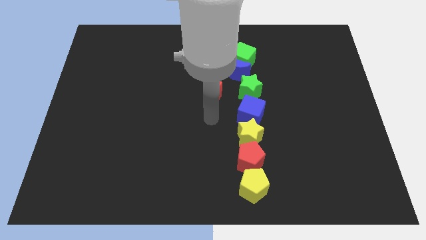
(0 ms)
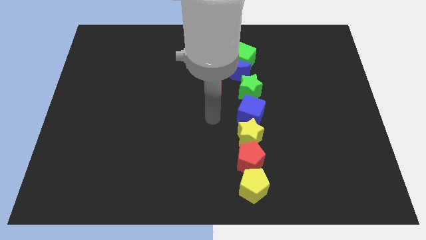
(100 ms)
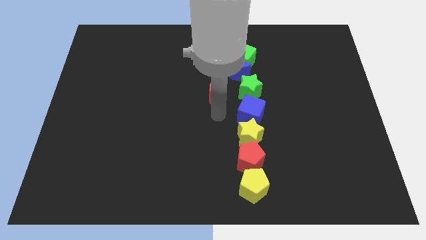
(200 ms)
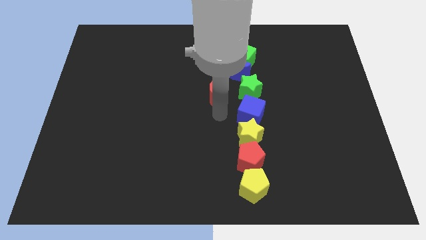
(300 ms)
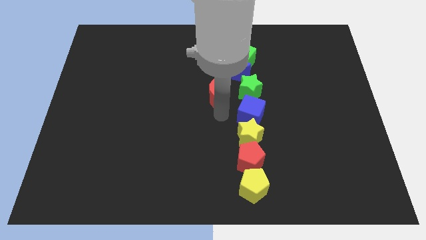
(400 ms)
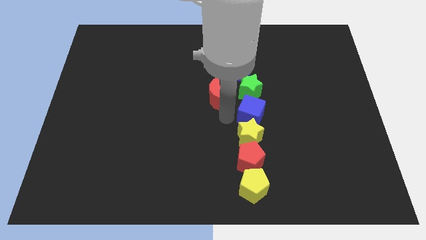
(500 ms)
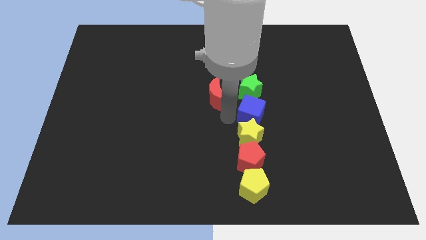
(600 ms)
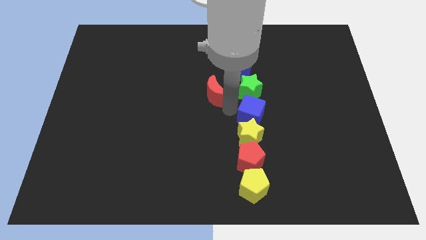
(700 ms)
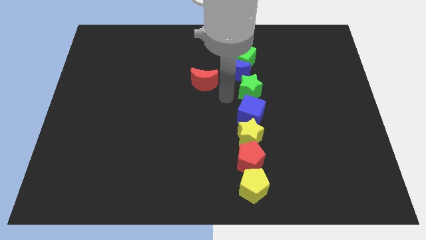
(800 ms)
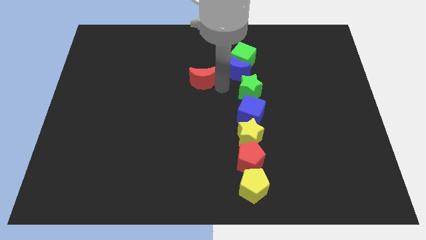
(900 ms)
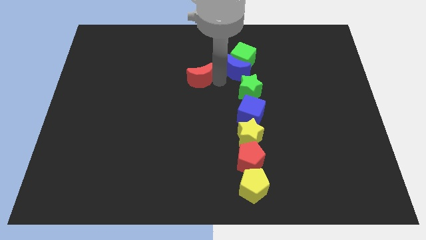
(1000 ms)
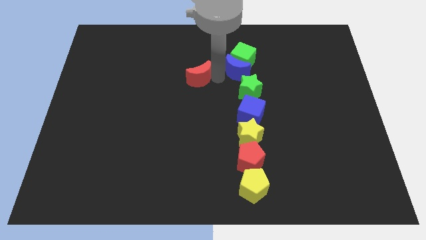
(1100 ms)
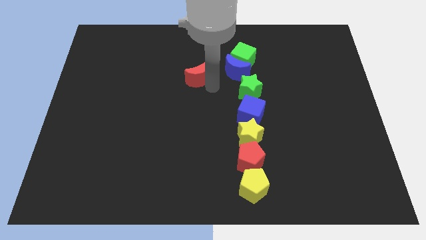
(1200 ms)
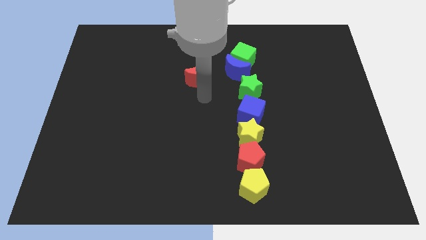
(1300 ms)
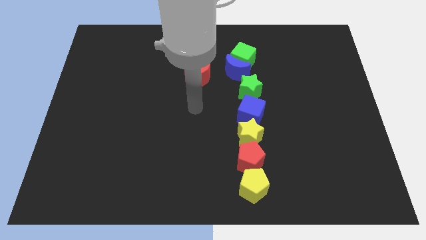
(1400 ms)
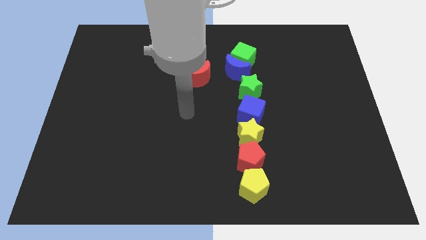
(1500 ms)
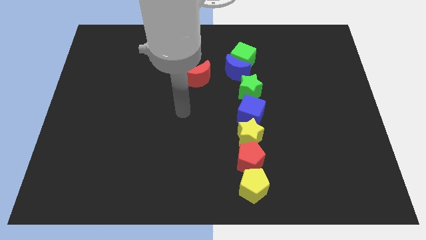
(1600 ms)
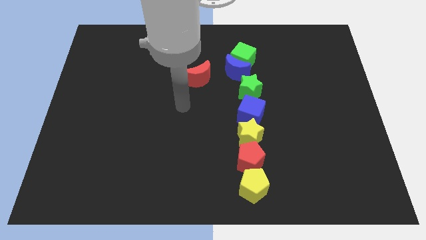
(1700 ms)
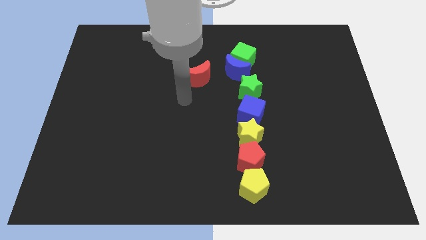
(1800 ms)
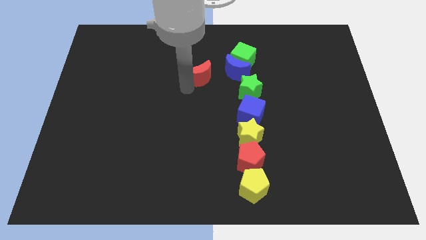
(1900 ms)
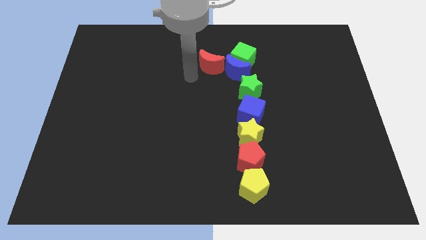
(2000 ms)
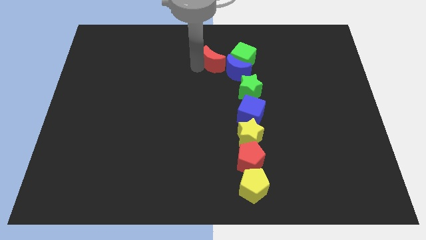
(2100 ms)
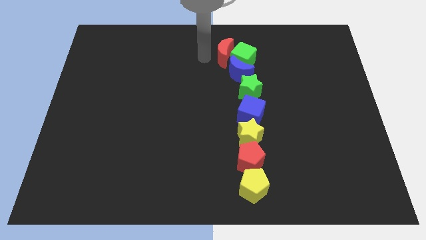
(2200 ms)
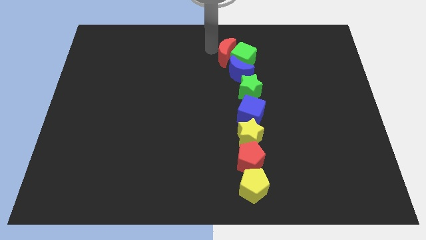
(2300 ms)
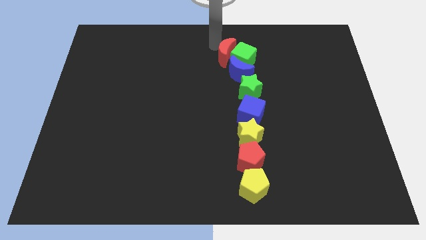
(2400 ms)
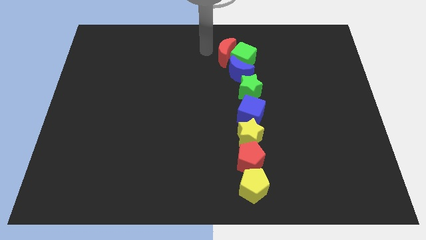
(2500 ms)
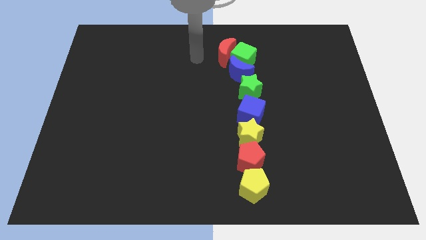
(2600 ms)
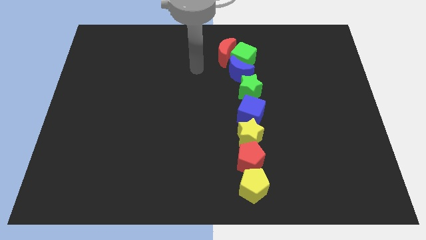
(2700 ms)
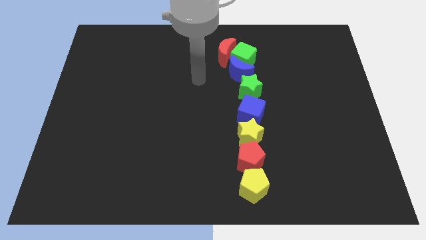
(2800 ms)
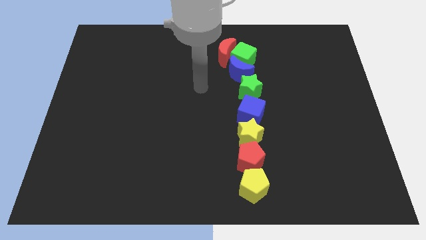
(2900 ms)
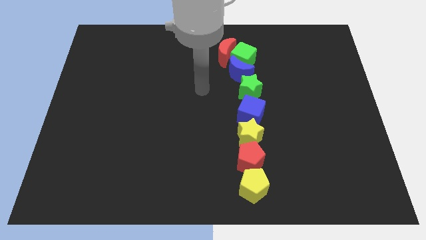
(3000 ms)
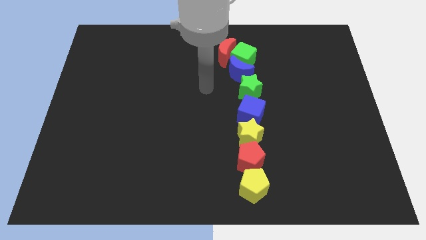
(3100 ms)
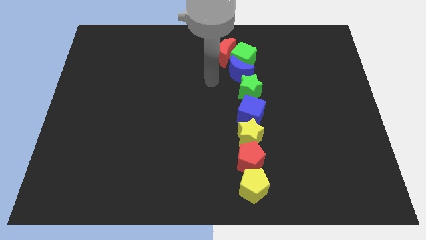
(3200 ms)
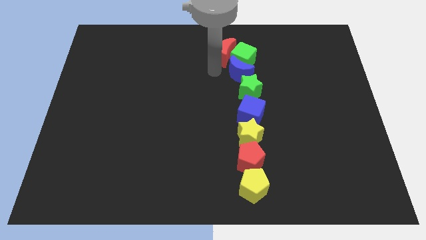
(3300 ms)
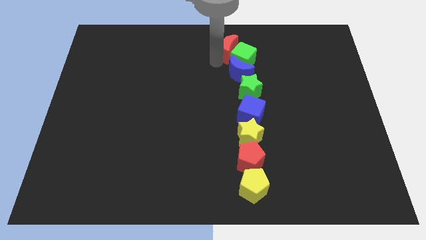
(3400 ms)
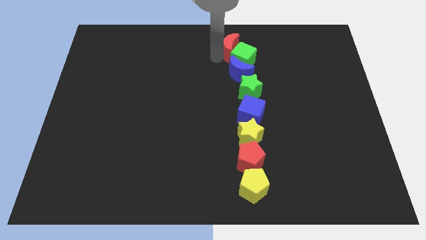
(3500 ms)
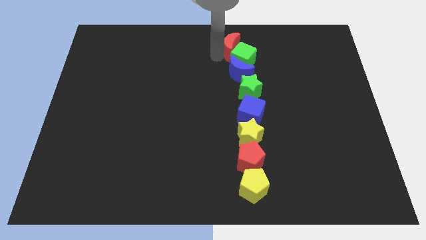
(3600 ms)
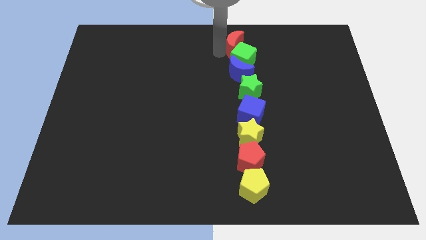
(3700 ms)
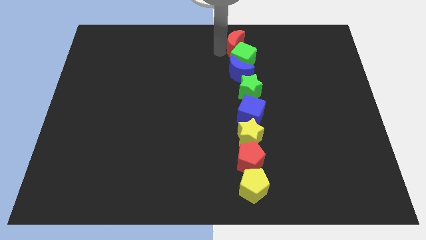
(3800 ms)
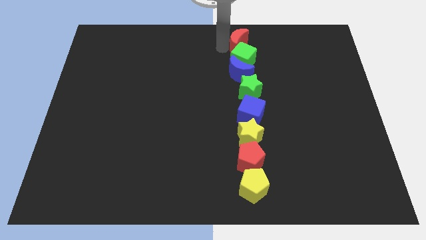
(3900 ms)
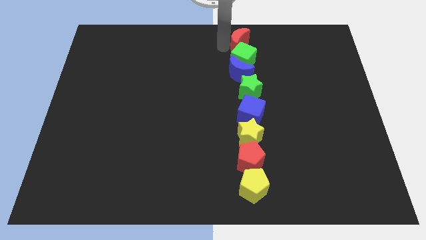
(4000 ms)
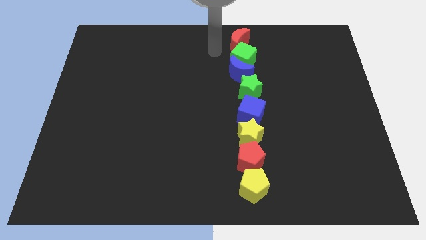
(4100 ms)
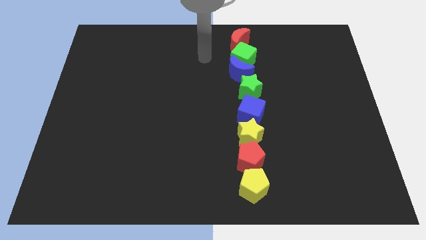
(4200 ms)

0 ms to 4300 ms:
put the red crescent at the top of the green cube

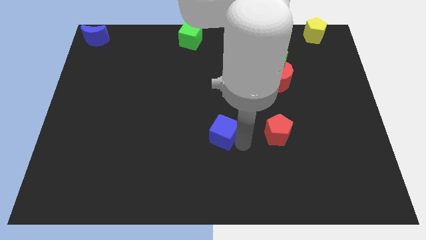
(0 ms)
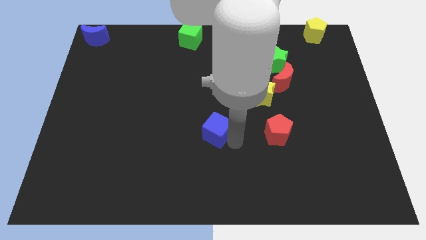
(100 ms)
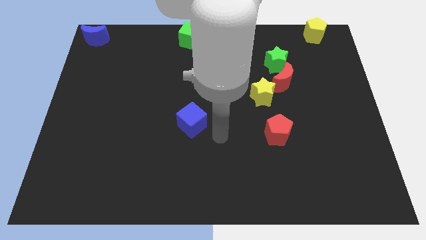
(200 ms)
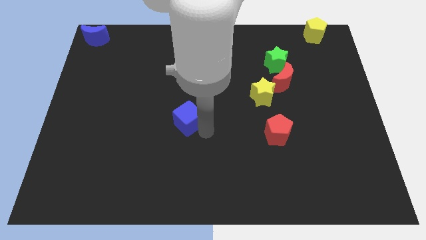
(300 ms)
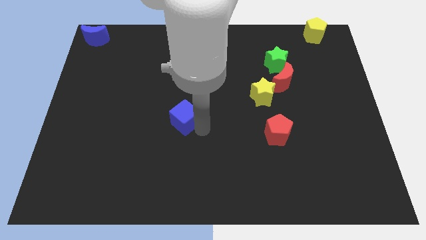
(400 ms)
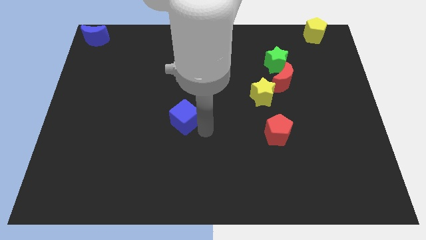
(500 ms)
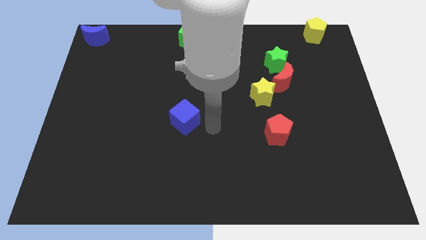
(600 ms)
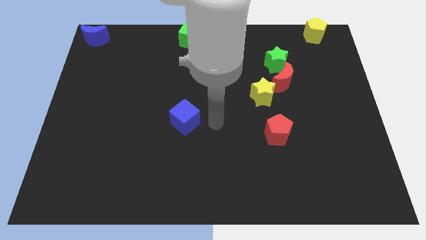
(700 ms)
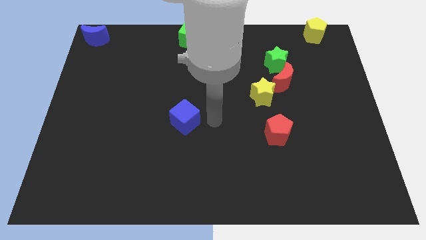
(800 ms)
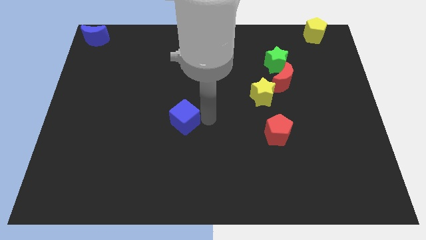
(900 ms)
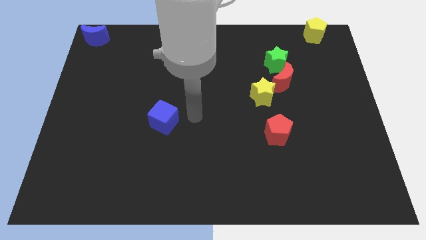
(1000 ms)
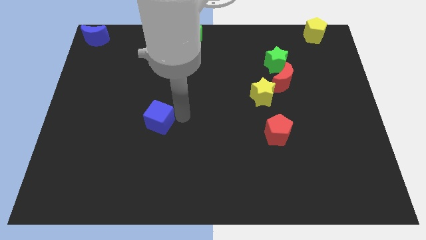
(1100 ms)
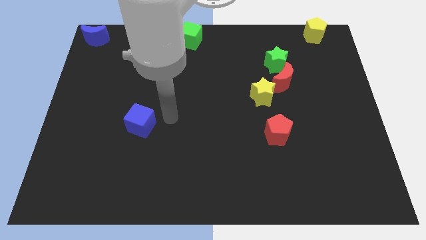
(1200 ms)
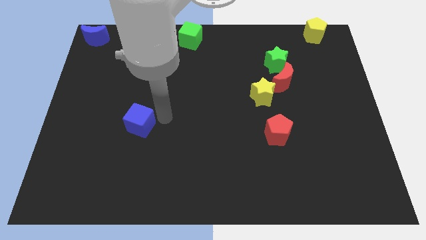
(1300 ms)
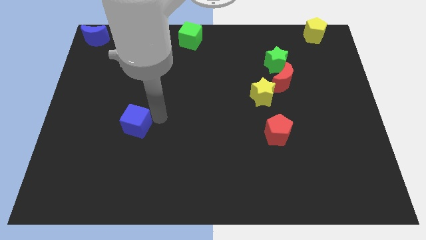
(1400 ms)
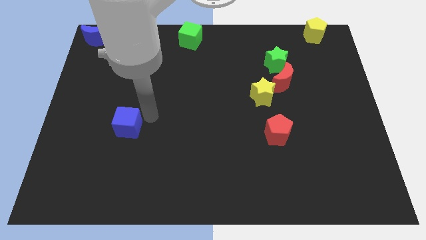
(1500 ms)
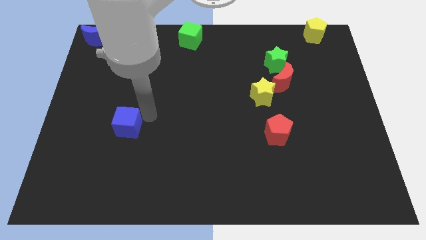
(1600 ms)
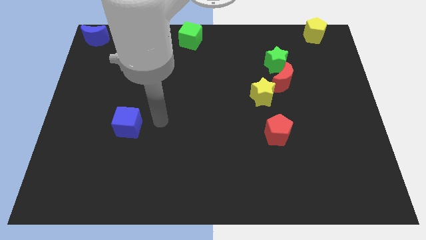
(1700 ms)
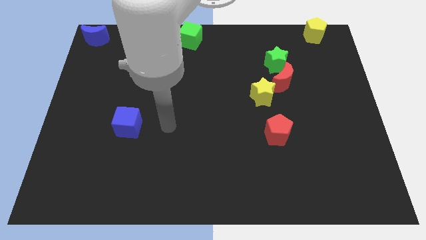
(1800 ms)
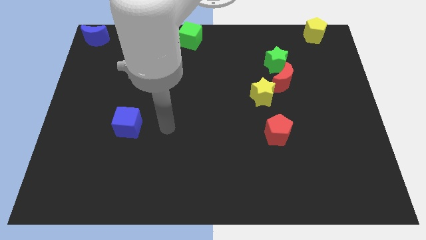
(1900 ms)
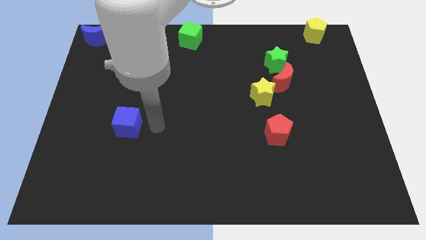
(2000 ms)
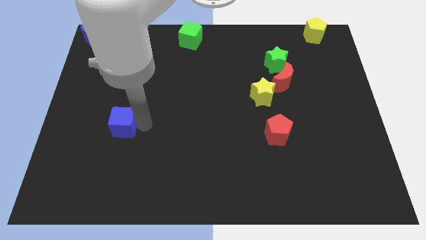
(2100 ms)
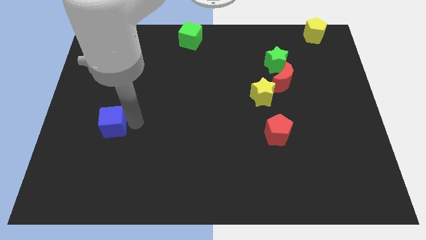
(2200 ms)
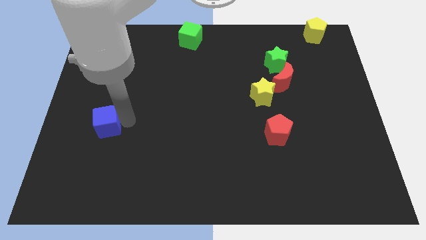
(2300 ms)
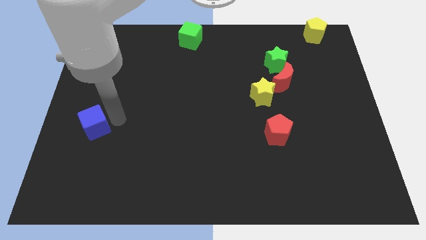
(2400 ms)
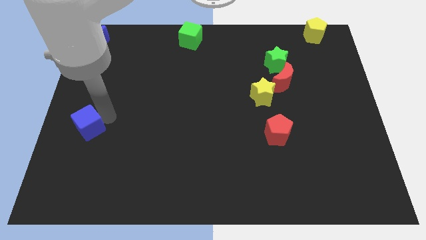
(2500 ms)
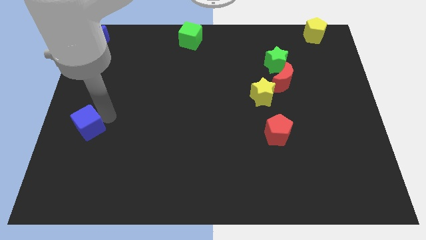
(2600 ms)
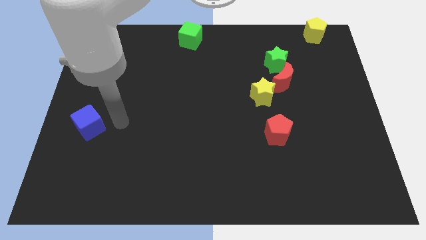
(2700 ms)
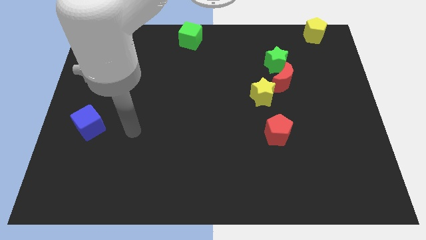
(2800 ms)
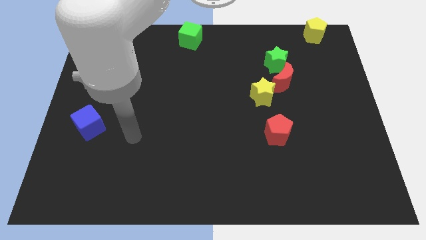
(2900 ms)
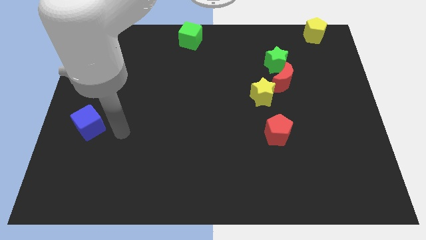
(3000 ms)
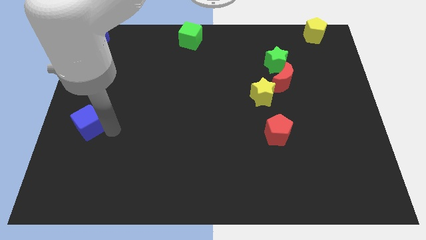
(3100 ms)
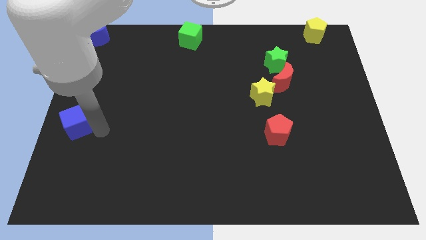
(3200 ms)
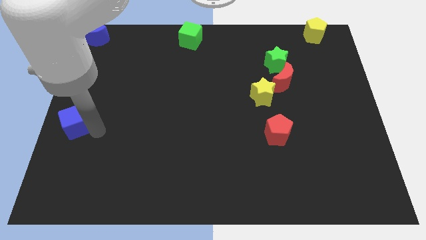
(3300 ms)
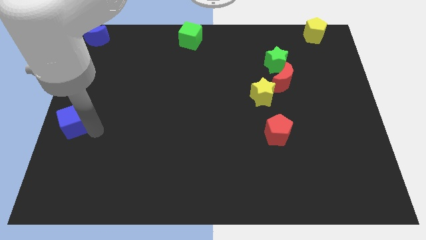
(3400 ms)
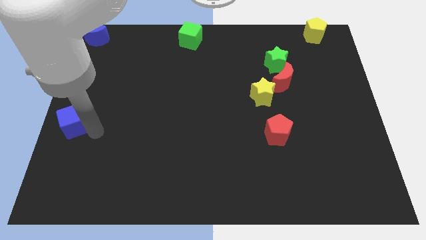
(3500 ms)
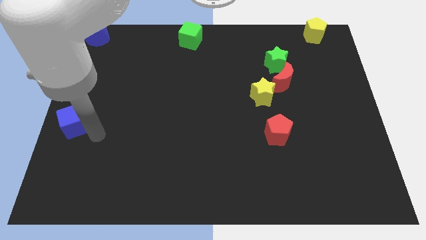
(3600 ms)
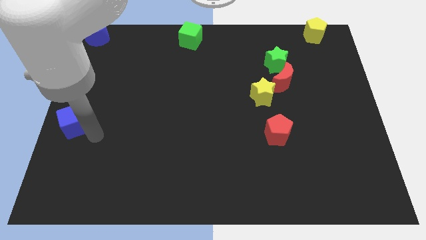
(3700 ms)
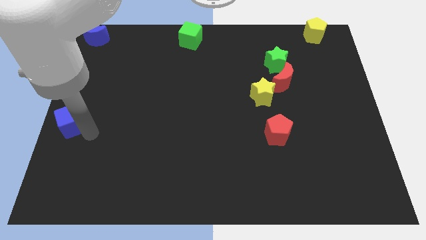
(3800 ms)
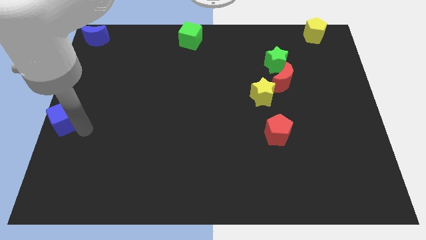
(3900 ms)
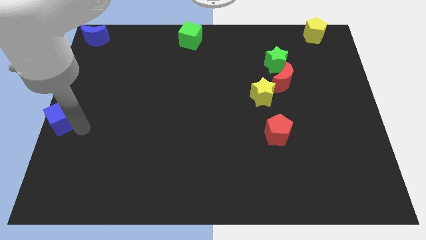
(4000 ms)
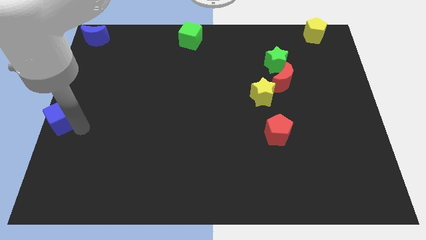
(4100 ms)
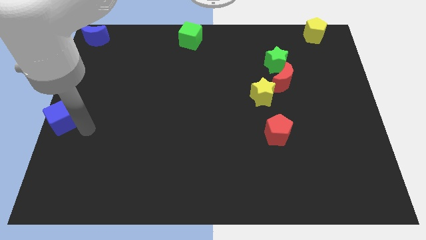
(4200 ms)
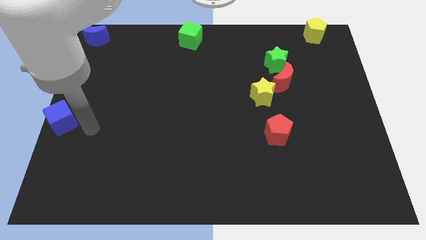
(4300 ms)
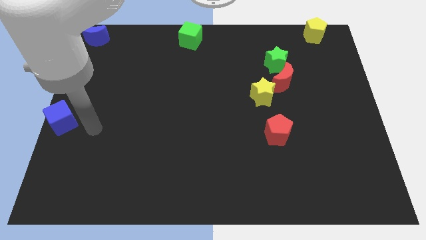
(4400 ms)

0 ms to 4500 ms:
push the blue cube to the center left of the board

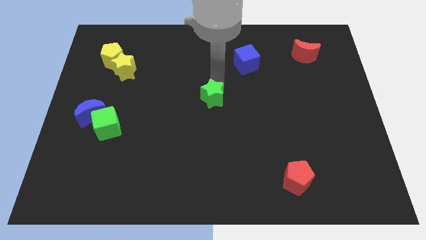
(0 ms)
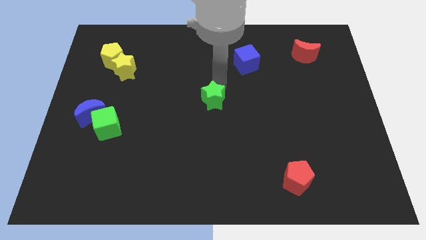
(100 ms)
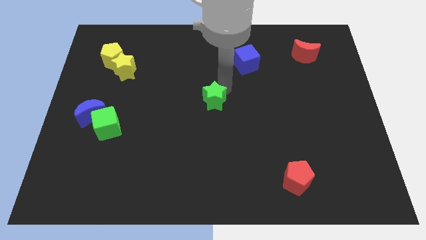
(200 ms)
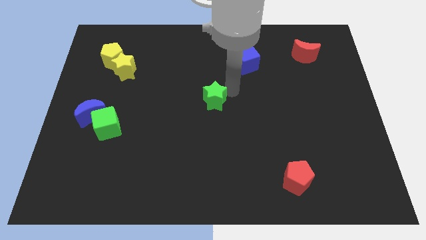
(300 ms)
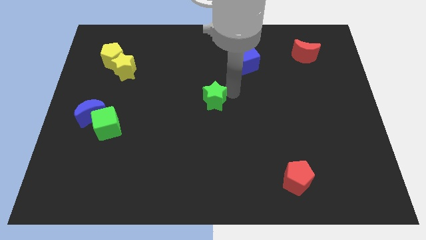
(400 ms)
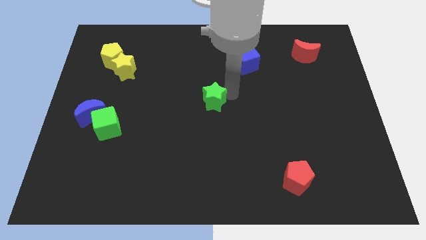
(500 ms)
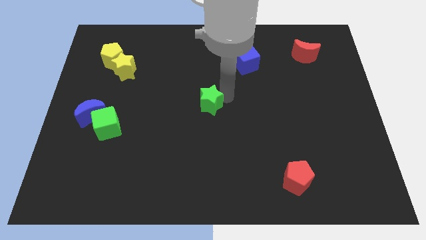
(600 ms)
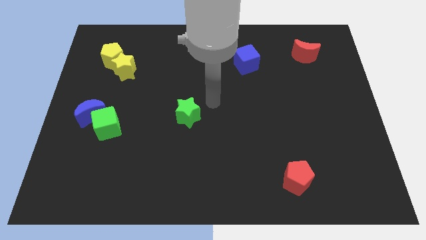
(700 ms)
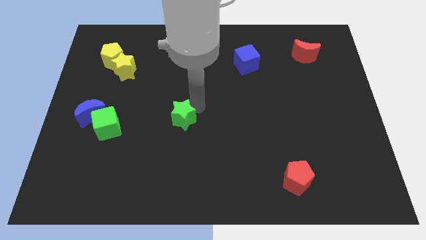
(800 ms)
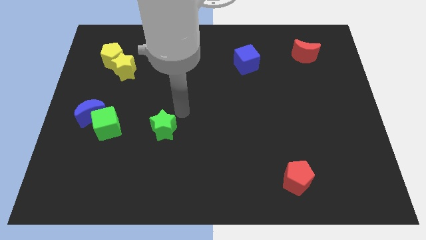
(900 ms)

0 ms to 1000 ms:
place green star to the right of the green cube
